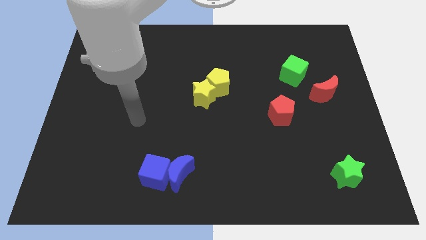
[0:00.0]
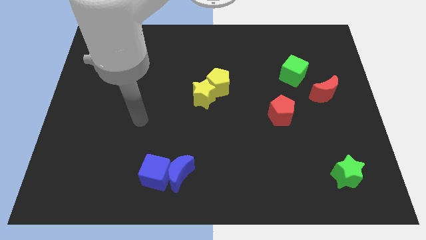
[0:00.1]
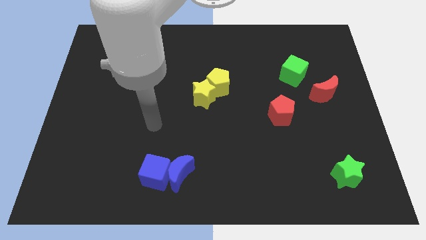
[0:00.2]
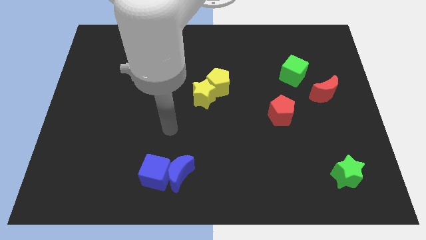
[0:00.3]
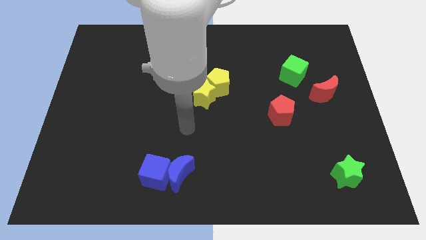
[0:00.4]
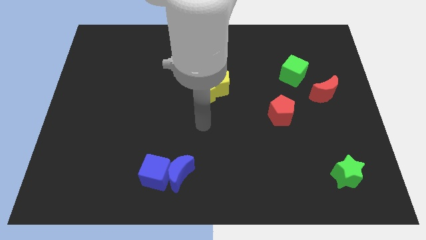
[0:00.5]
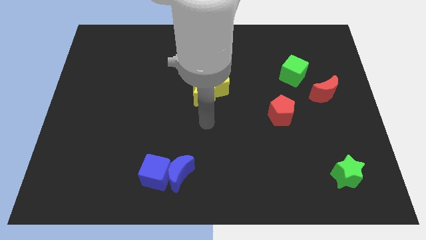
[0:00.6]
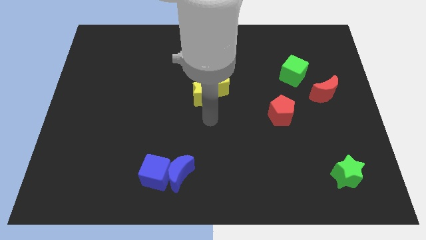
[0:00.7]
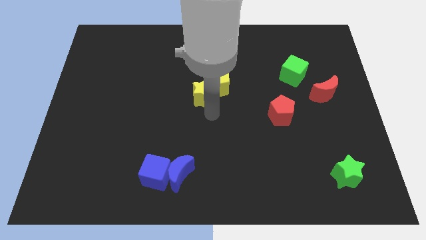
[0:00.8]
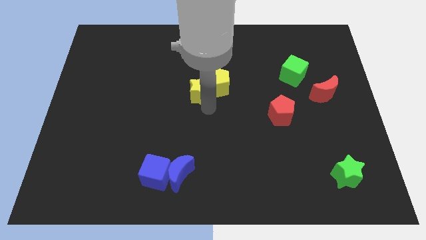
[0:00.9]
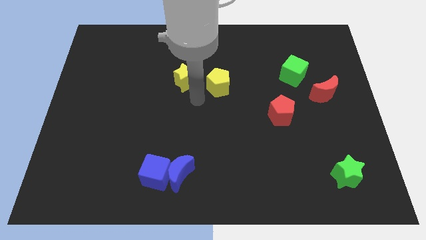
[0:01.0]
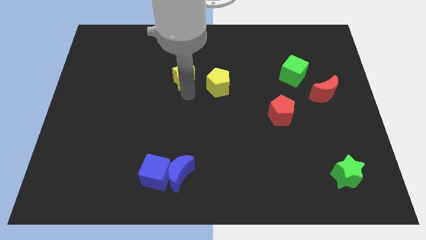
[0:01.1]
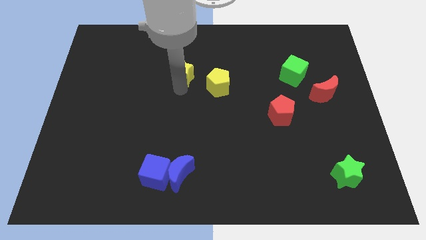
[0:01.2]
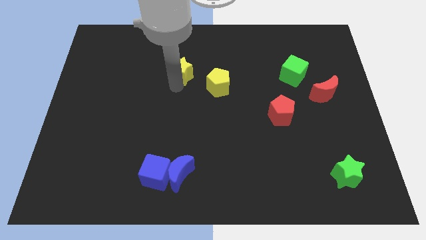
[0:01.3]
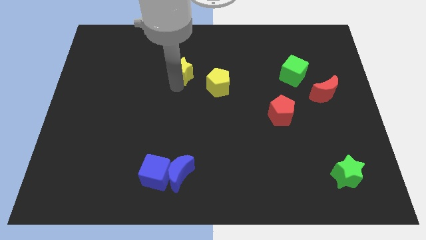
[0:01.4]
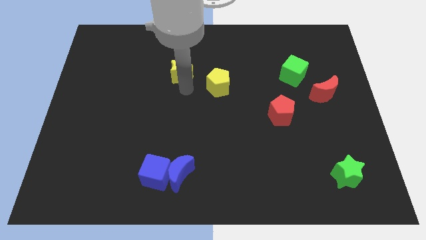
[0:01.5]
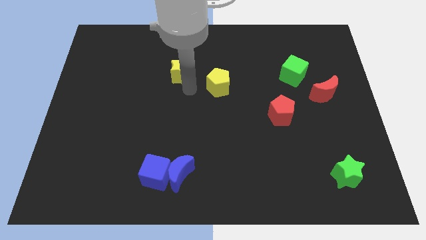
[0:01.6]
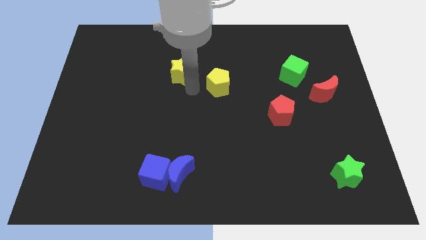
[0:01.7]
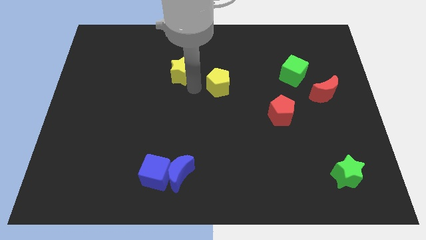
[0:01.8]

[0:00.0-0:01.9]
separate the yellow star upwards

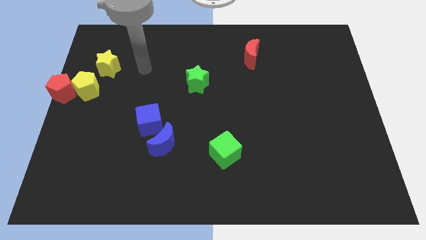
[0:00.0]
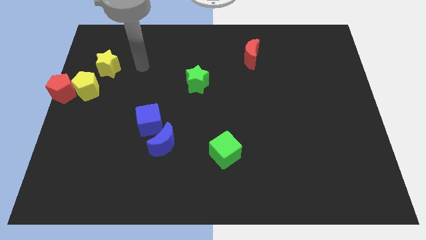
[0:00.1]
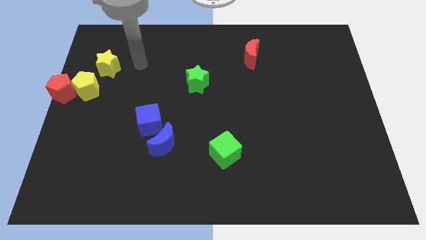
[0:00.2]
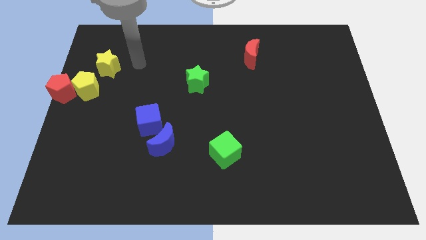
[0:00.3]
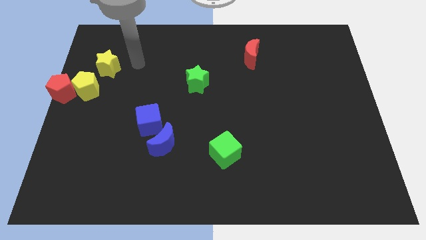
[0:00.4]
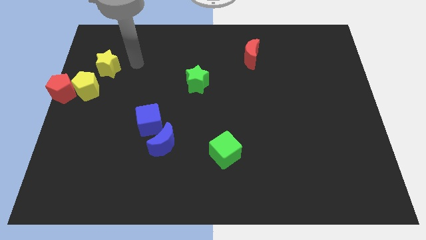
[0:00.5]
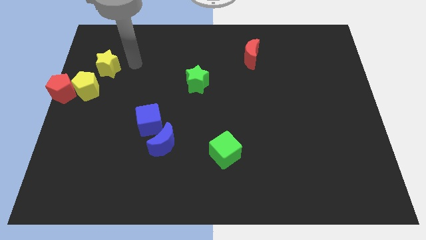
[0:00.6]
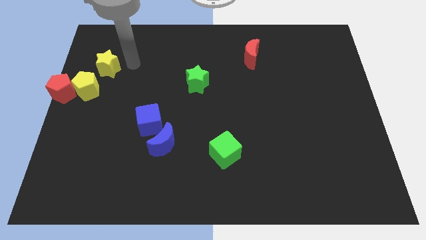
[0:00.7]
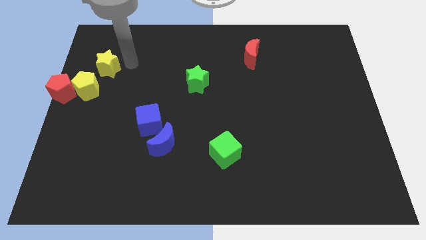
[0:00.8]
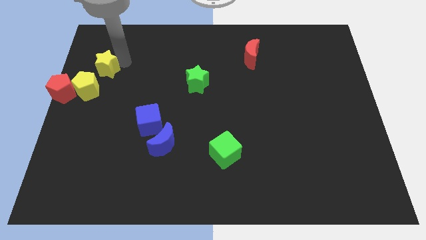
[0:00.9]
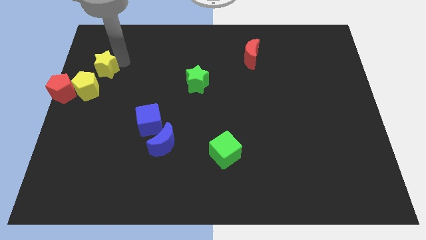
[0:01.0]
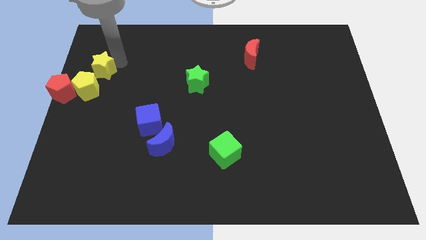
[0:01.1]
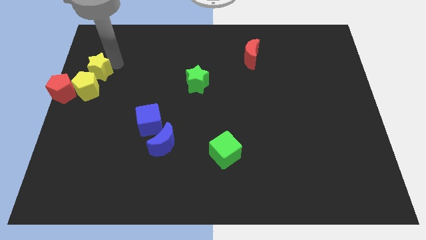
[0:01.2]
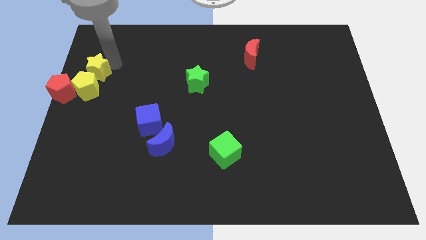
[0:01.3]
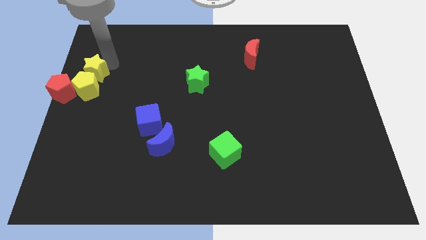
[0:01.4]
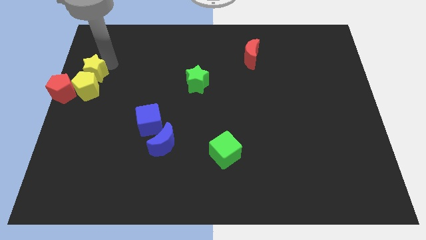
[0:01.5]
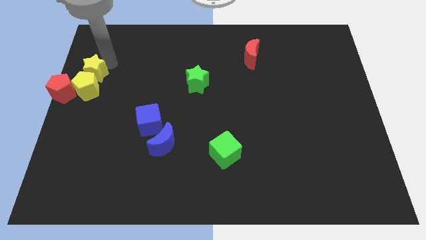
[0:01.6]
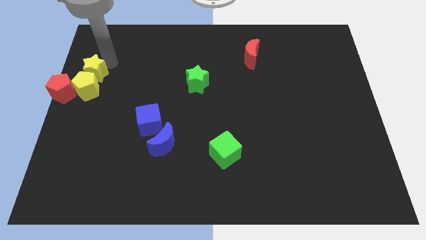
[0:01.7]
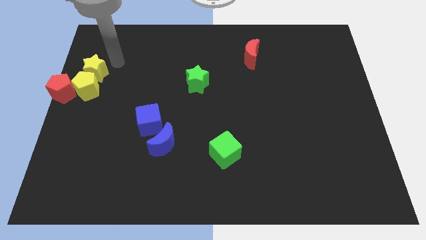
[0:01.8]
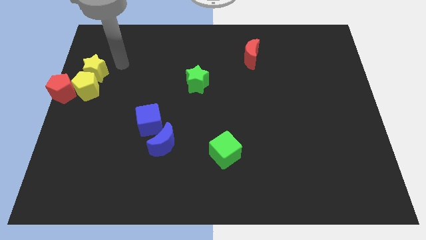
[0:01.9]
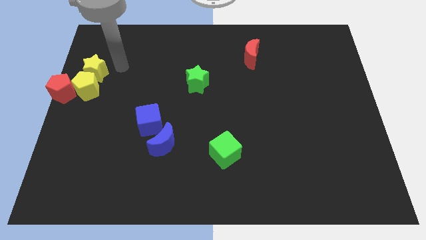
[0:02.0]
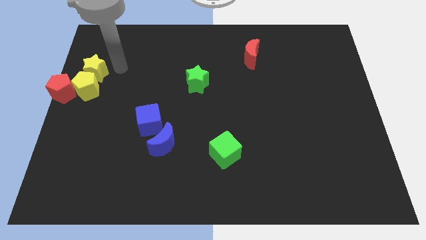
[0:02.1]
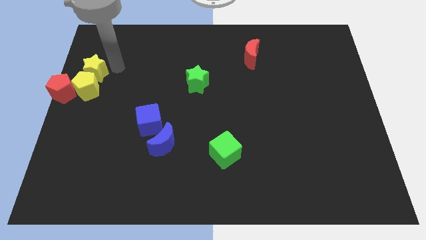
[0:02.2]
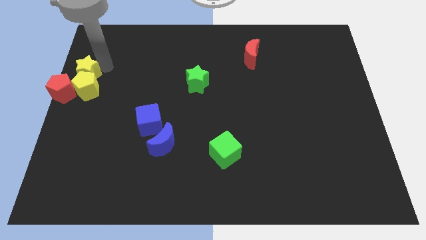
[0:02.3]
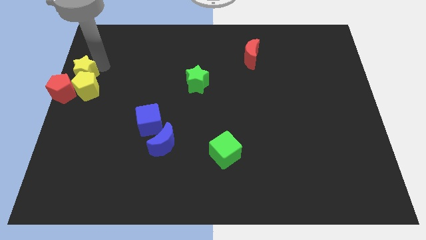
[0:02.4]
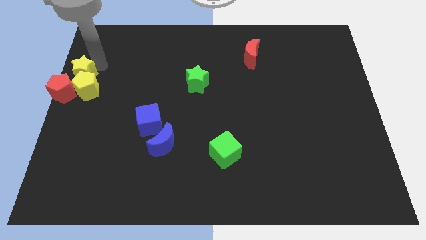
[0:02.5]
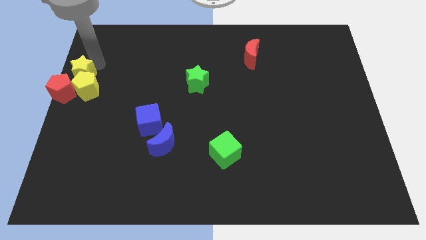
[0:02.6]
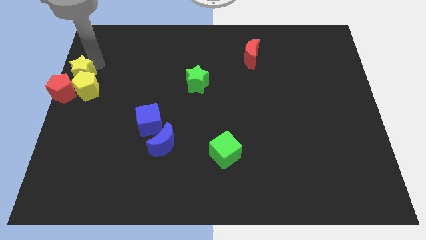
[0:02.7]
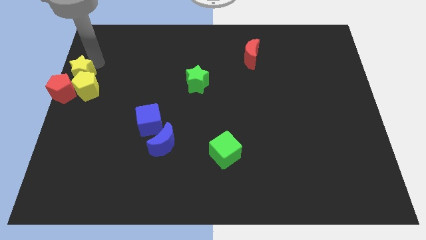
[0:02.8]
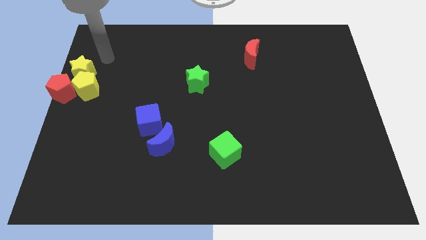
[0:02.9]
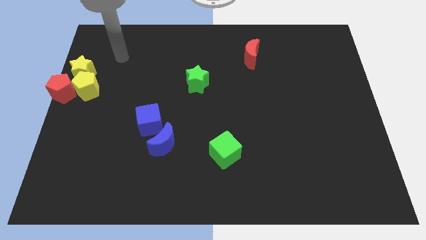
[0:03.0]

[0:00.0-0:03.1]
add yellow star on top of yellow pentagon

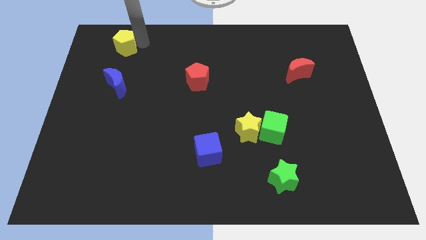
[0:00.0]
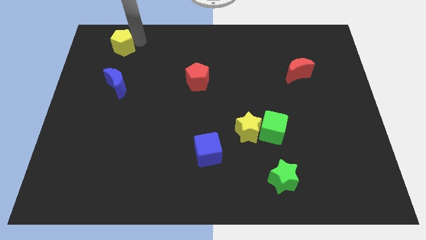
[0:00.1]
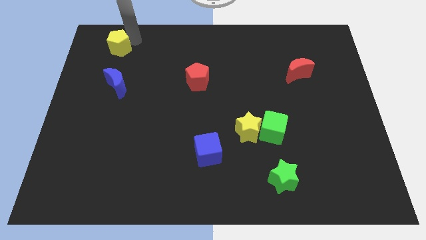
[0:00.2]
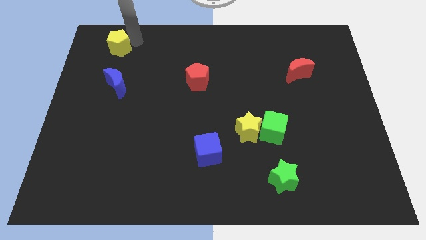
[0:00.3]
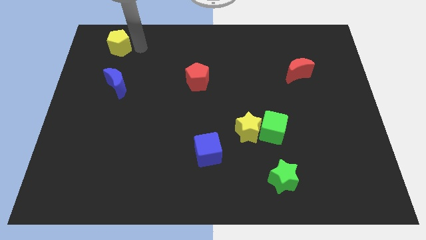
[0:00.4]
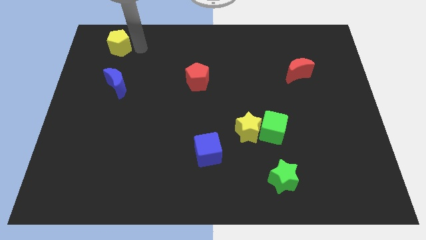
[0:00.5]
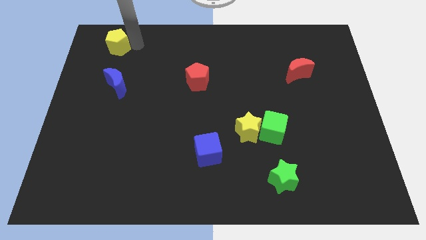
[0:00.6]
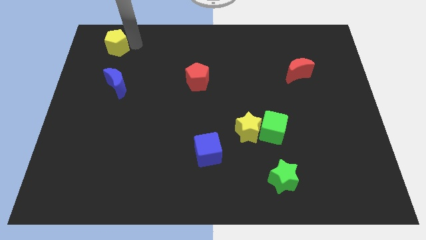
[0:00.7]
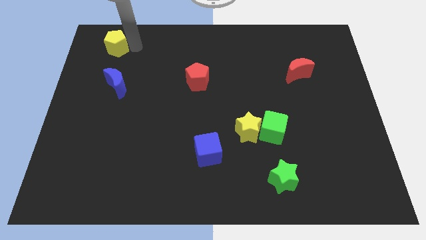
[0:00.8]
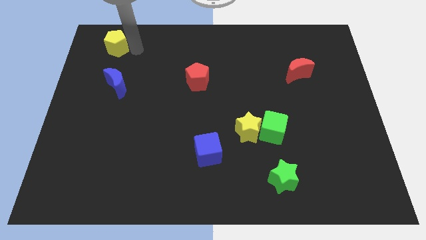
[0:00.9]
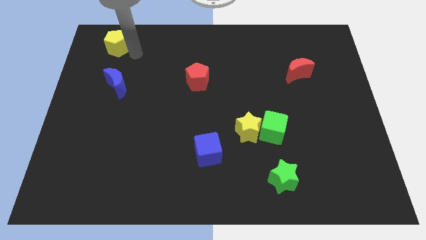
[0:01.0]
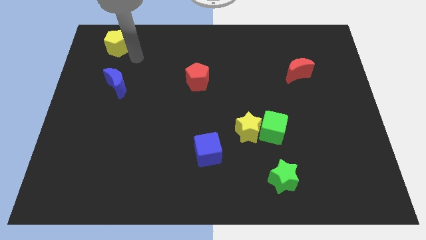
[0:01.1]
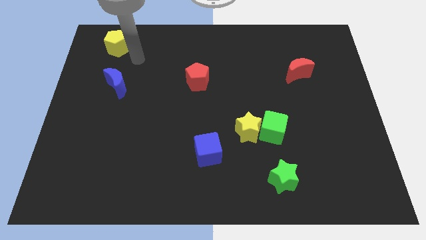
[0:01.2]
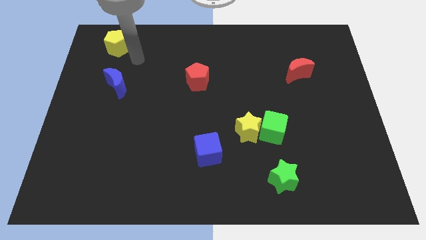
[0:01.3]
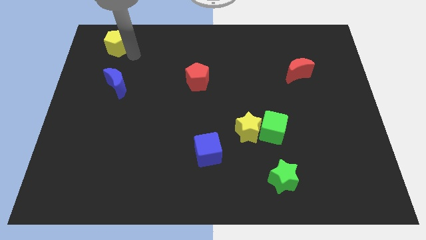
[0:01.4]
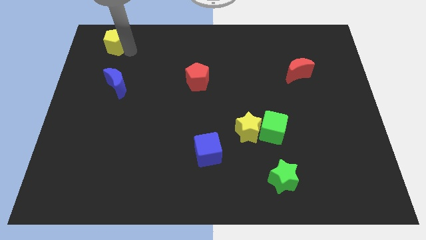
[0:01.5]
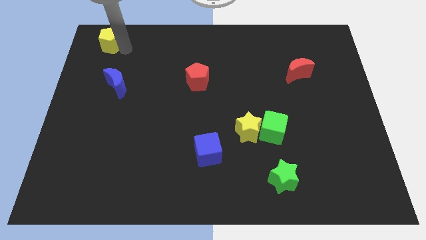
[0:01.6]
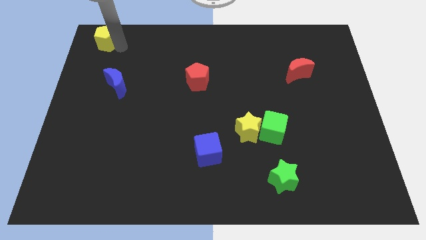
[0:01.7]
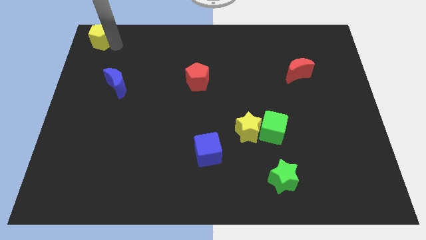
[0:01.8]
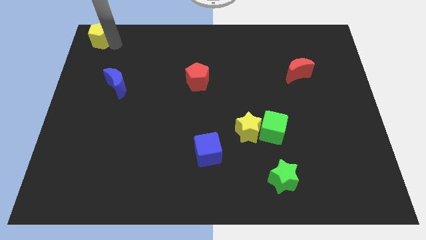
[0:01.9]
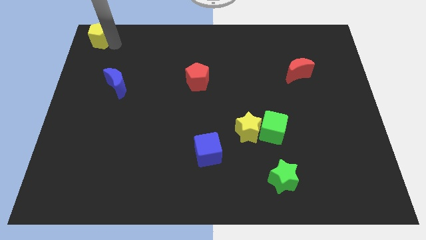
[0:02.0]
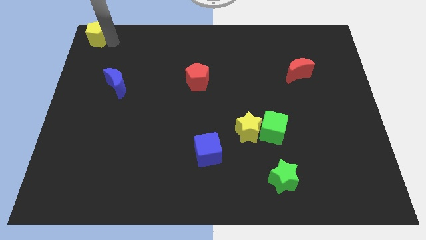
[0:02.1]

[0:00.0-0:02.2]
place the yellow pentagon to the top left side

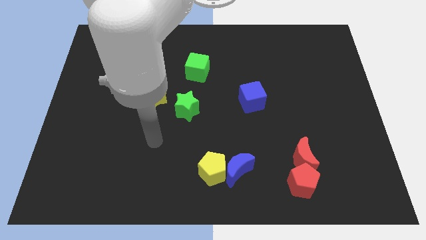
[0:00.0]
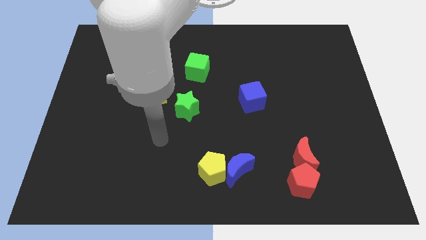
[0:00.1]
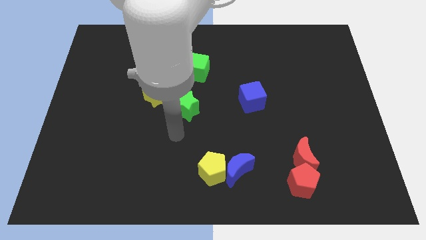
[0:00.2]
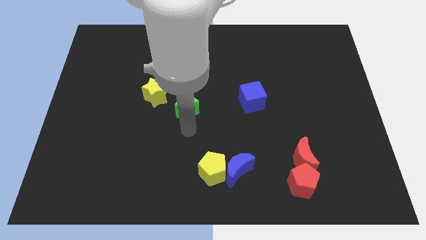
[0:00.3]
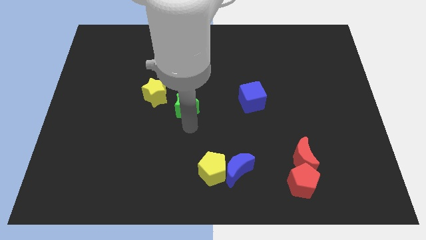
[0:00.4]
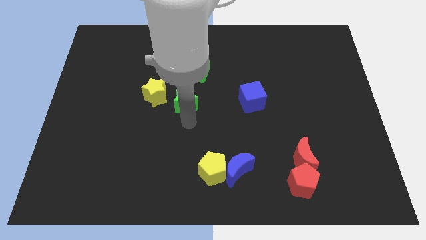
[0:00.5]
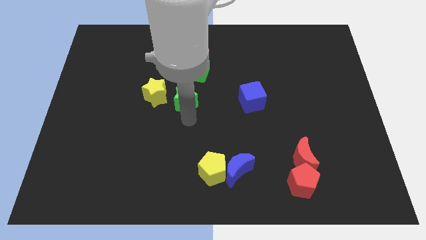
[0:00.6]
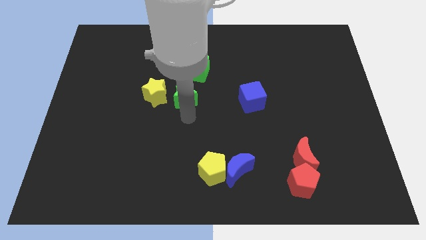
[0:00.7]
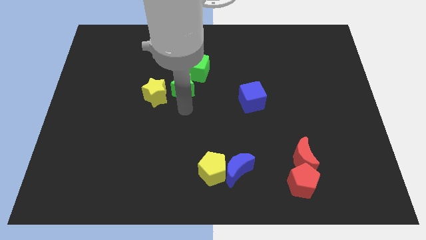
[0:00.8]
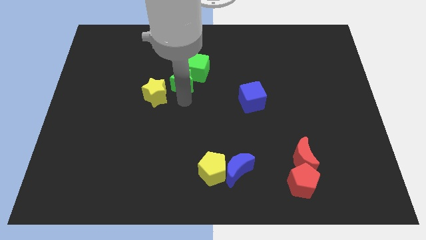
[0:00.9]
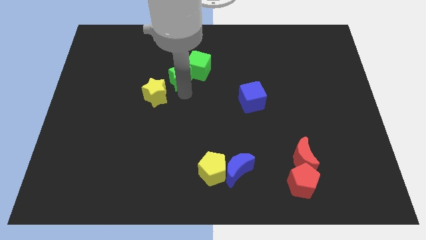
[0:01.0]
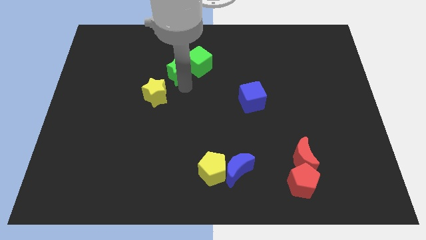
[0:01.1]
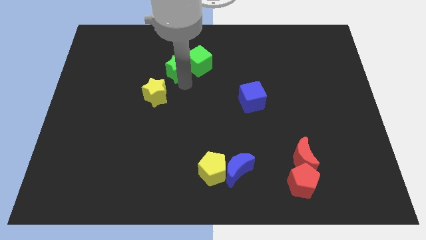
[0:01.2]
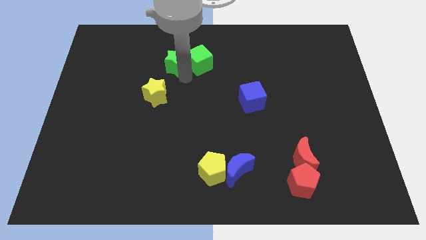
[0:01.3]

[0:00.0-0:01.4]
push the green star into the green cube

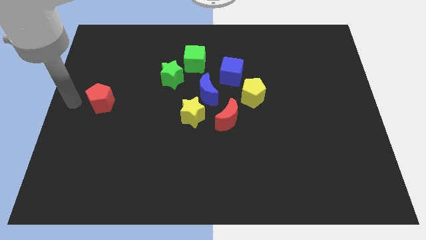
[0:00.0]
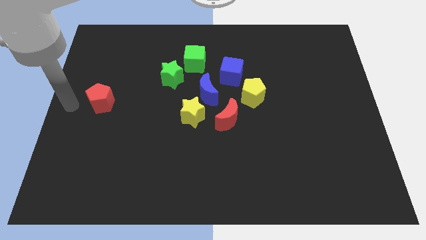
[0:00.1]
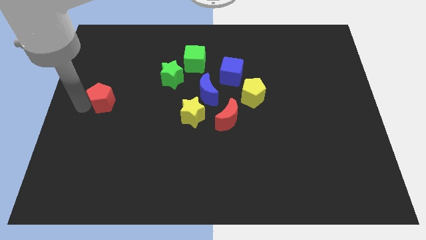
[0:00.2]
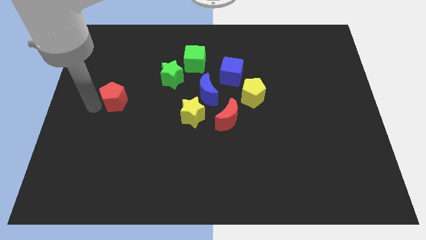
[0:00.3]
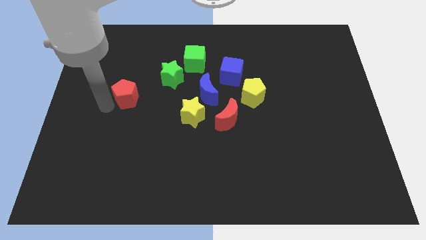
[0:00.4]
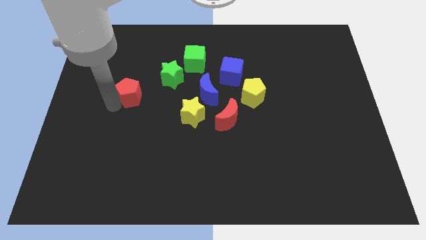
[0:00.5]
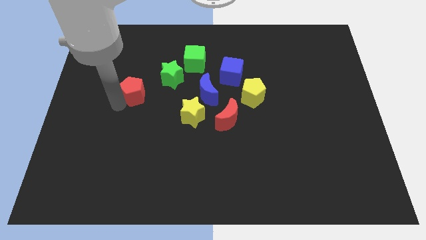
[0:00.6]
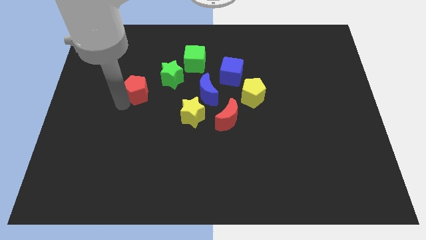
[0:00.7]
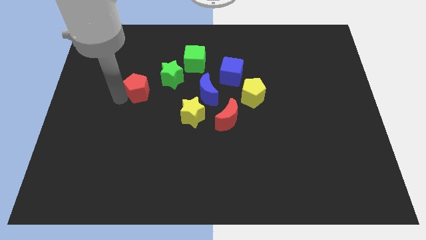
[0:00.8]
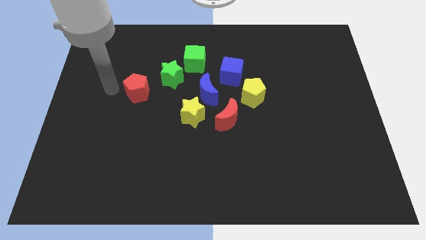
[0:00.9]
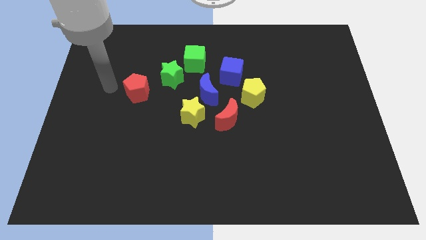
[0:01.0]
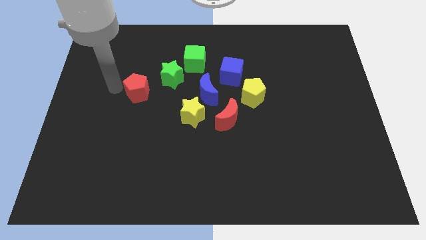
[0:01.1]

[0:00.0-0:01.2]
place the red pentagon diagonal to the yellow star
